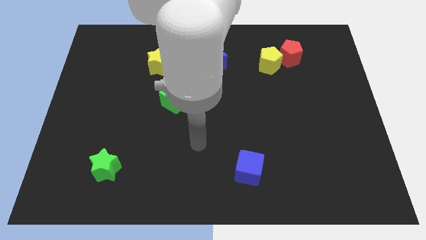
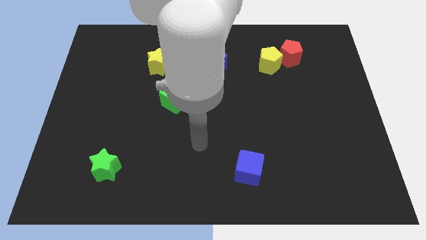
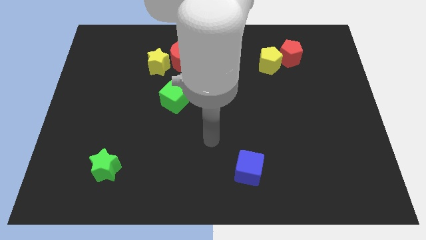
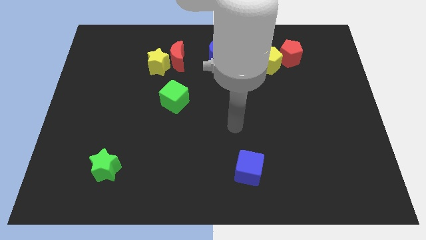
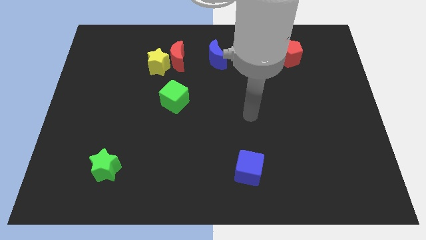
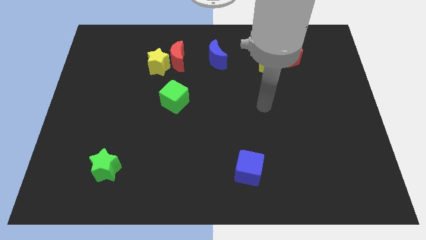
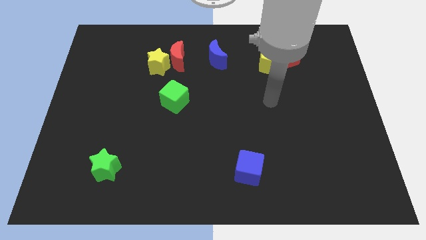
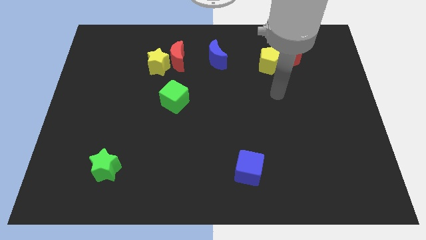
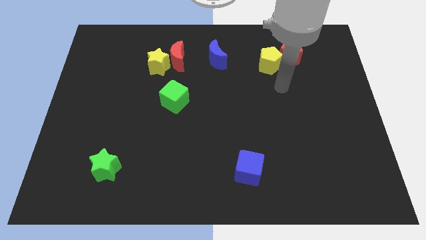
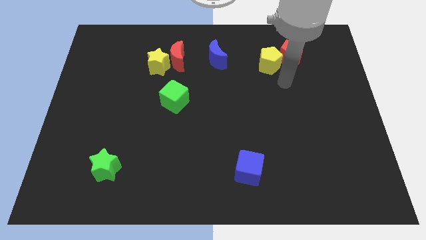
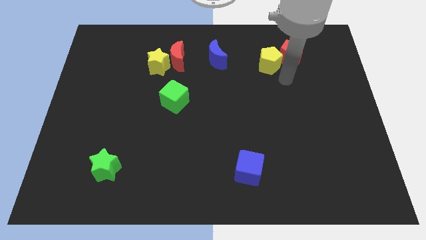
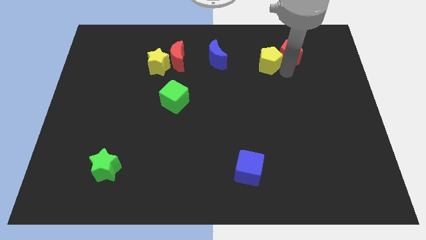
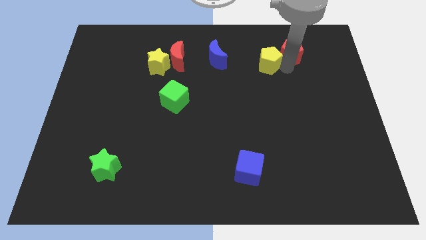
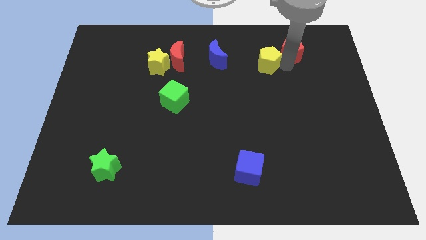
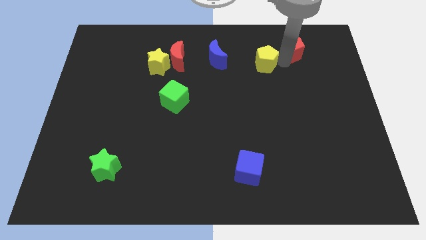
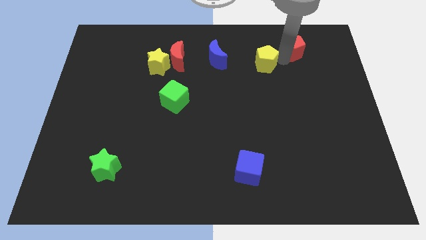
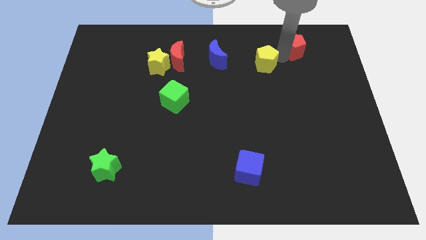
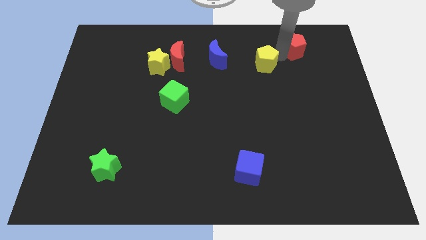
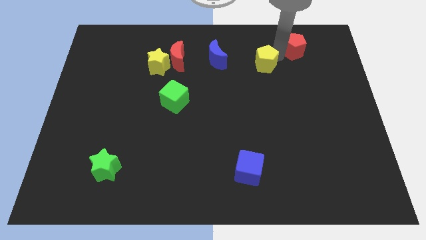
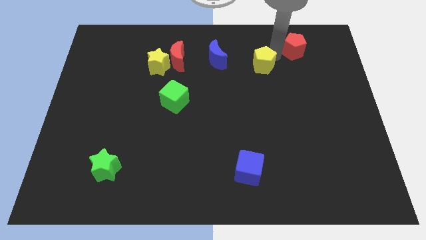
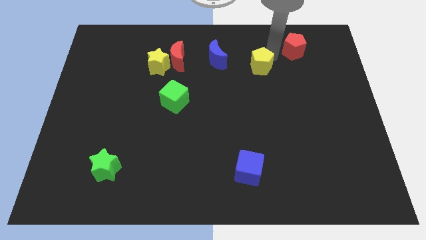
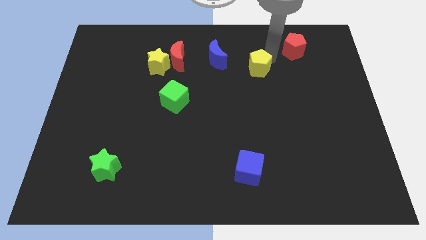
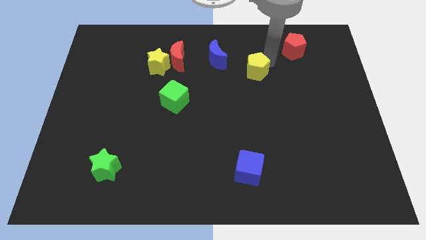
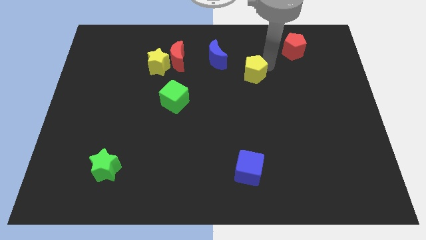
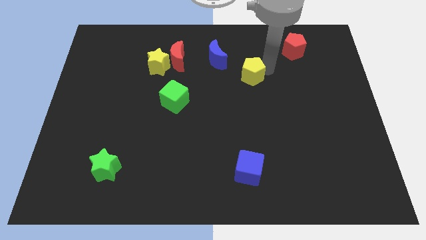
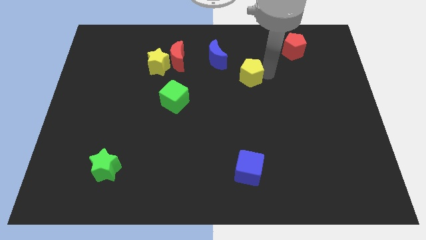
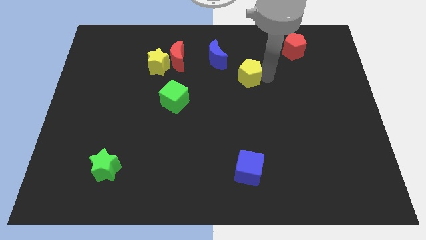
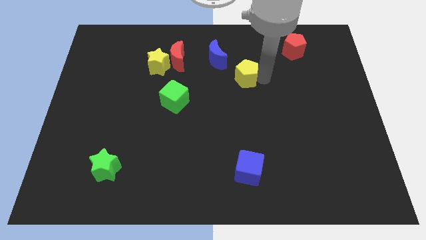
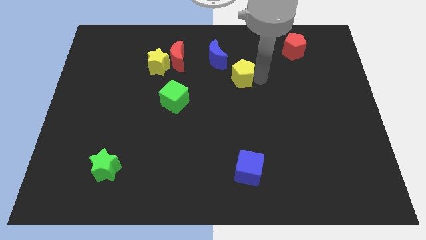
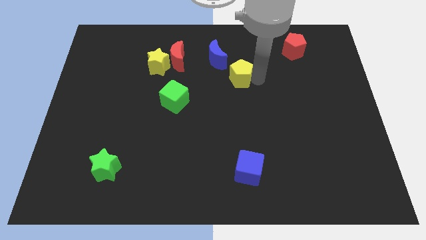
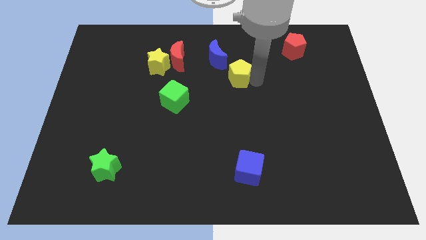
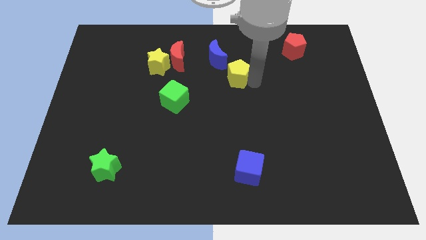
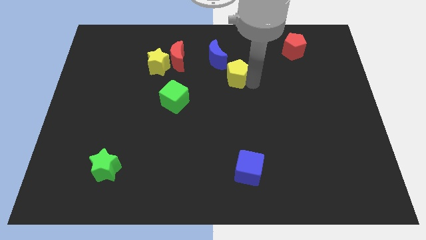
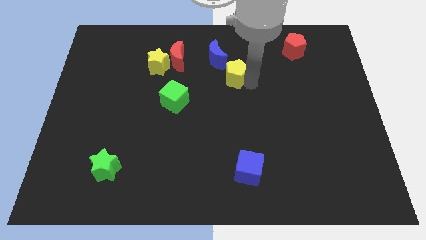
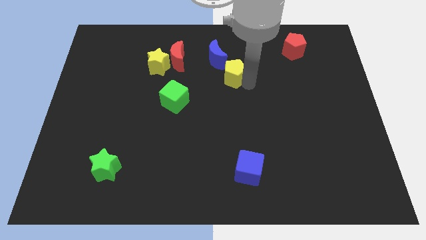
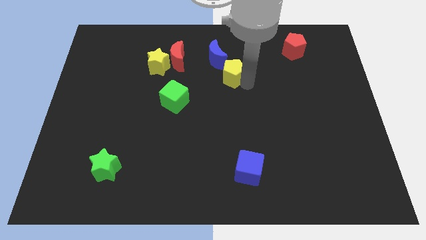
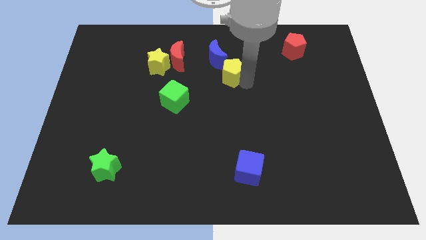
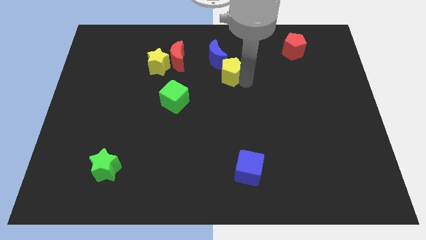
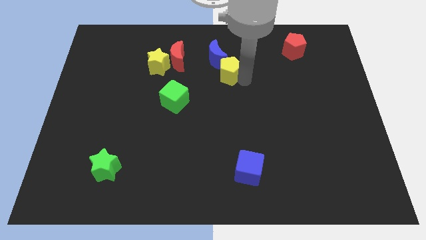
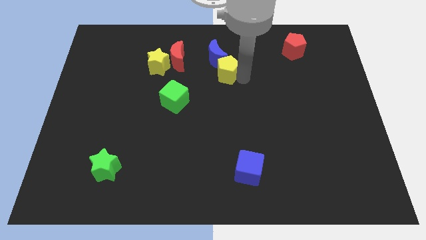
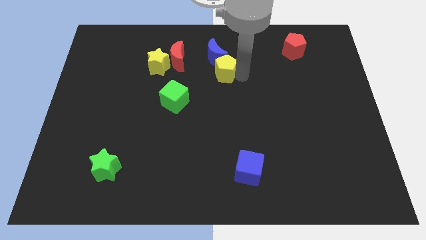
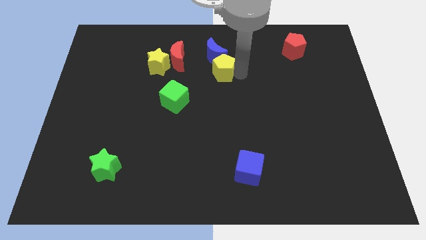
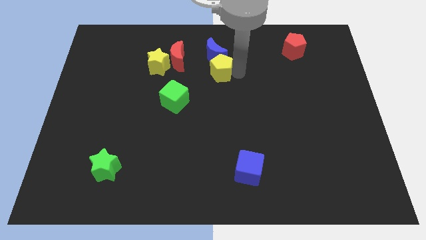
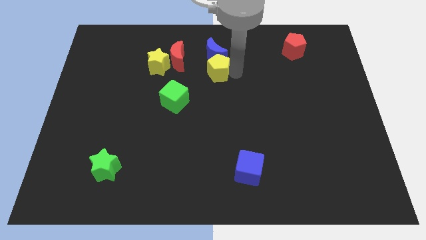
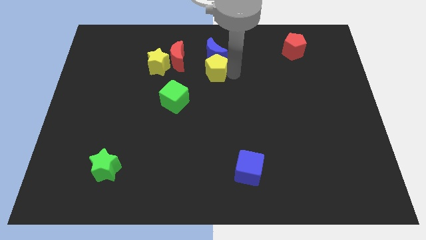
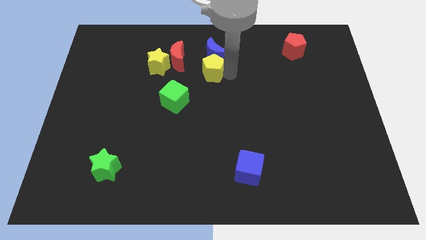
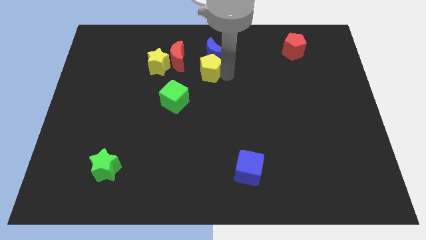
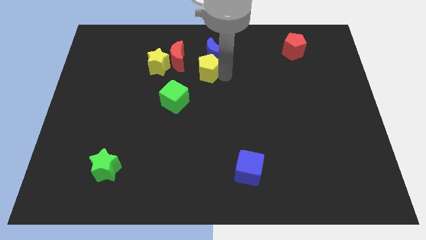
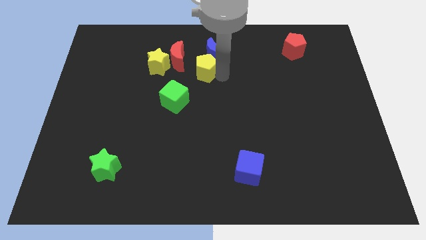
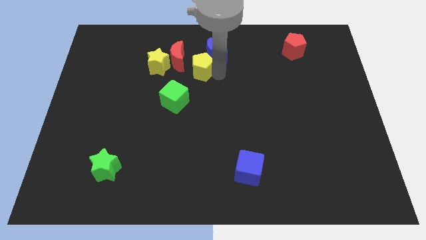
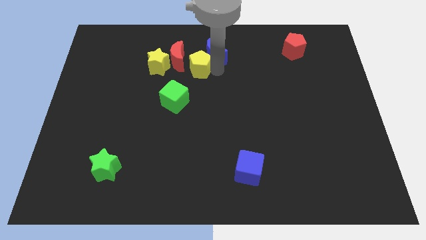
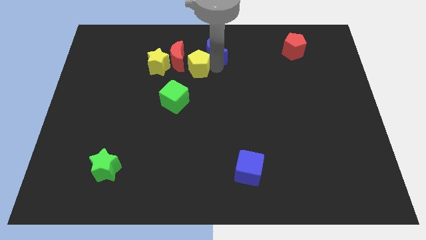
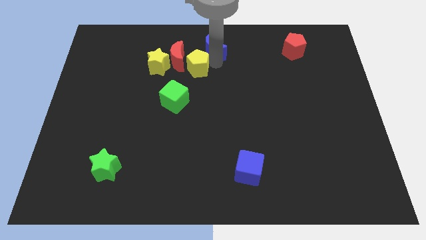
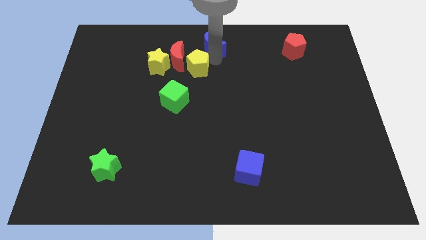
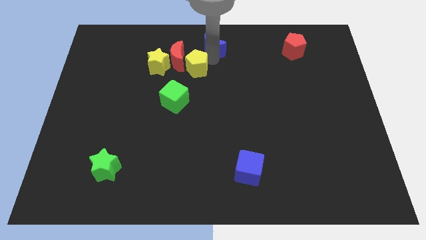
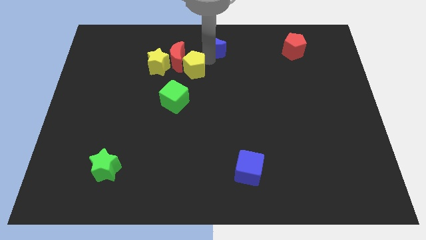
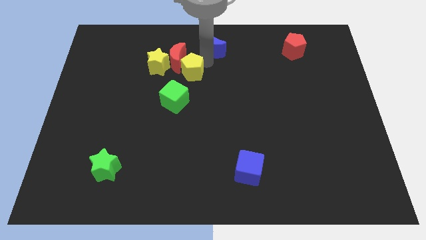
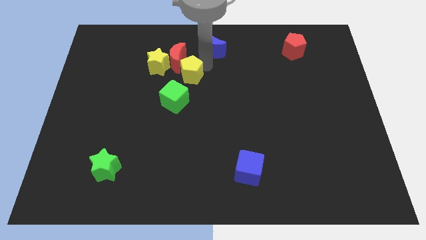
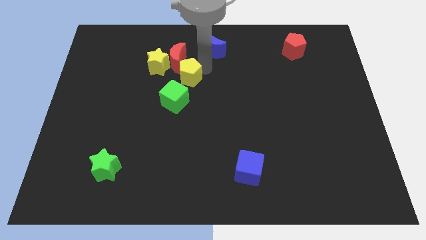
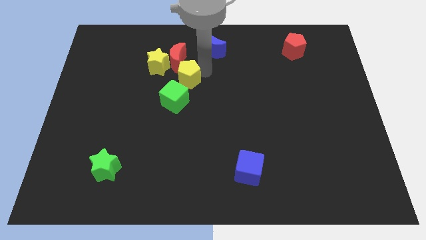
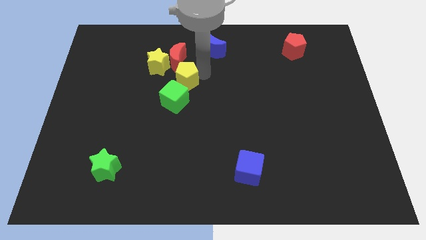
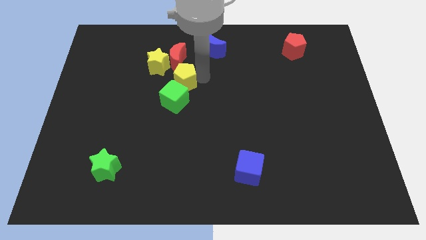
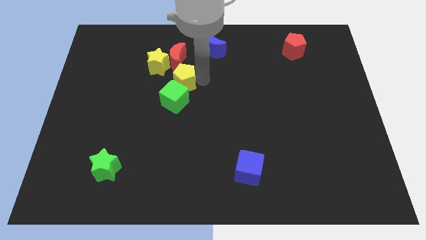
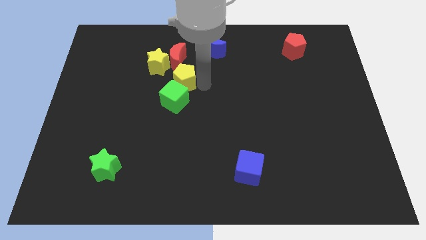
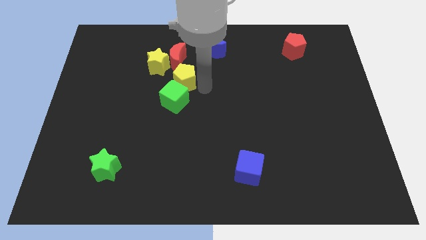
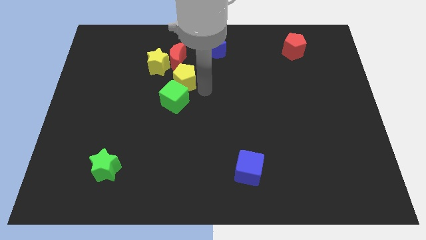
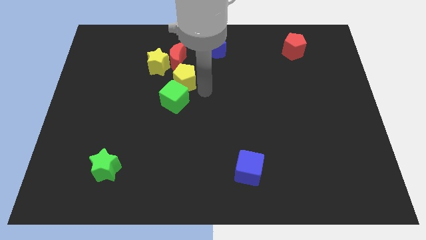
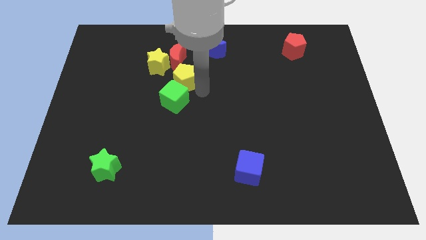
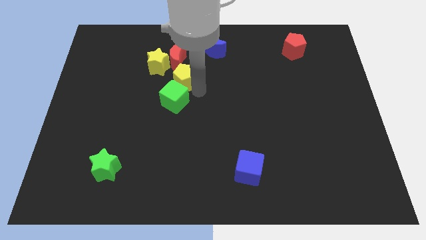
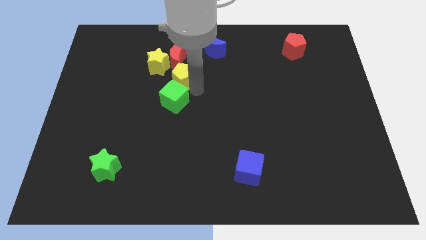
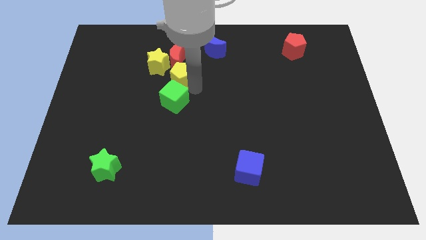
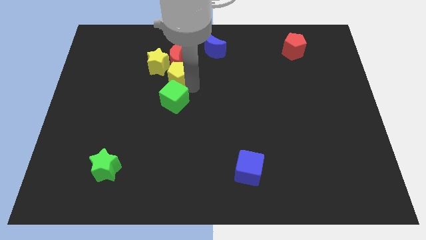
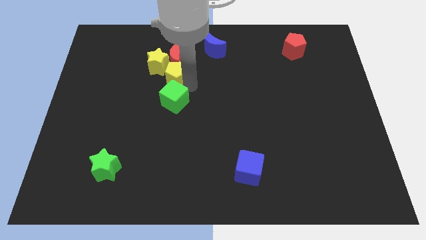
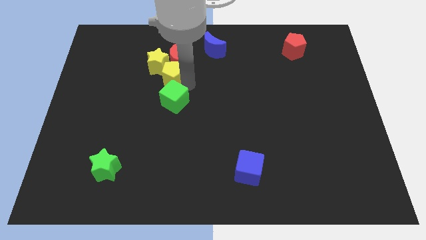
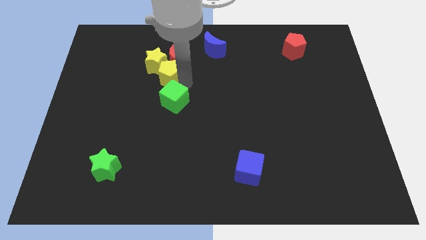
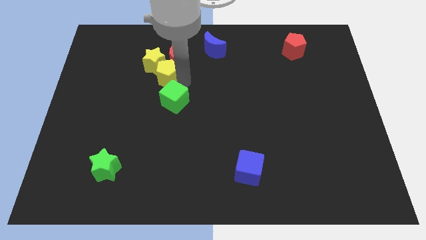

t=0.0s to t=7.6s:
push the yellow pentagon towards the yellow star

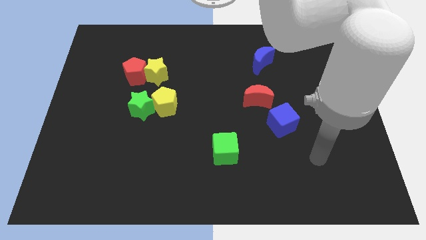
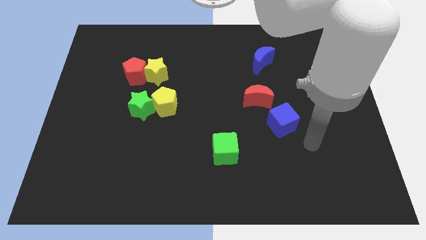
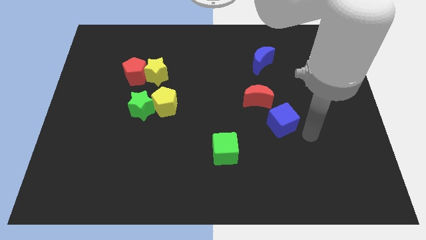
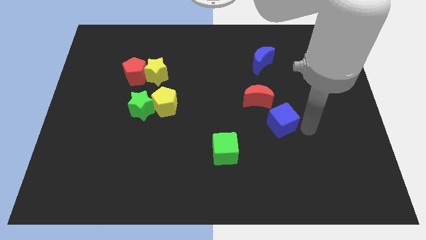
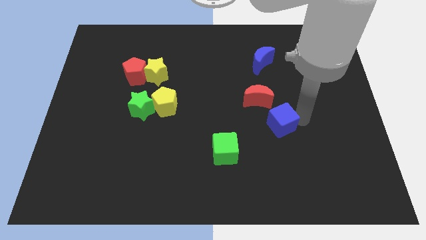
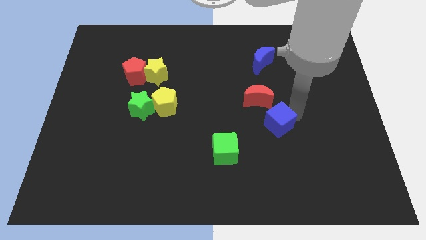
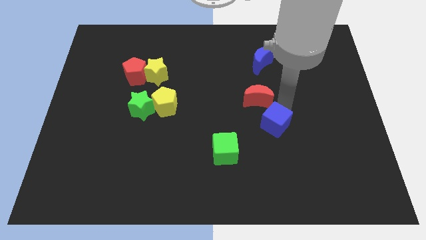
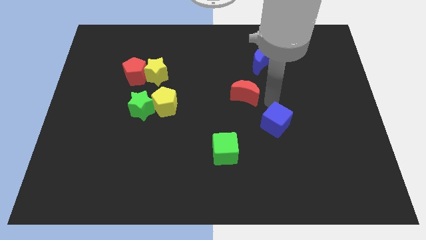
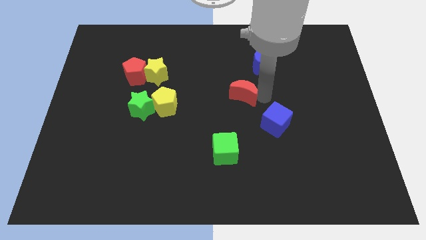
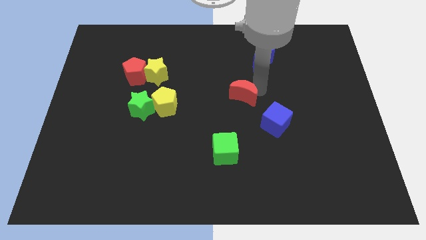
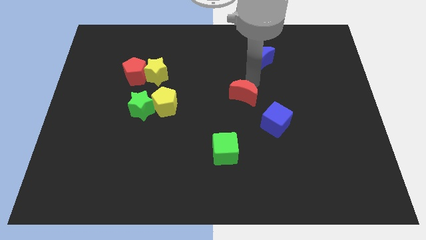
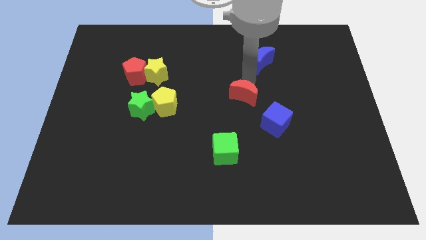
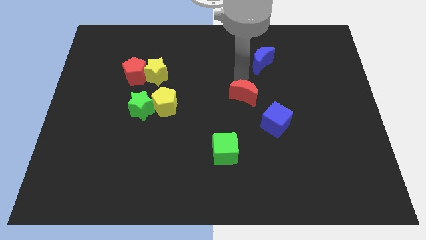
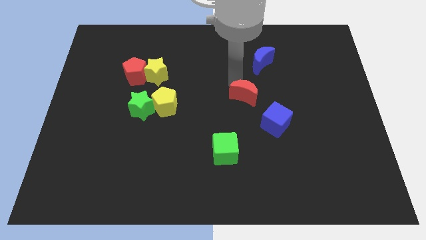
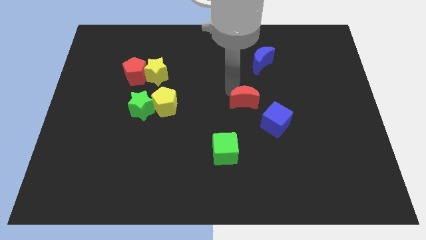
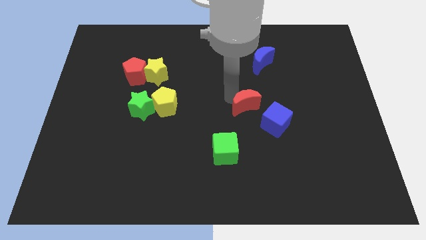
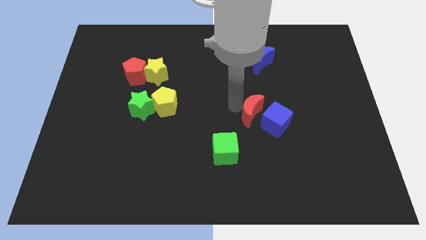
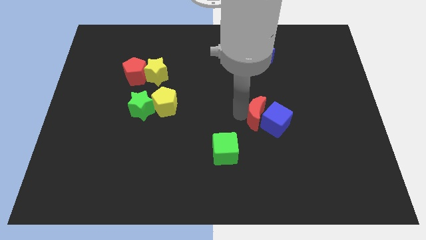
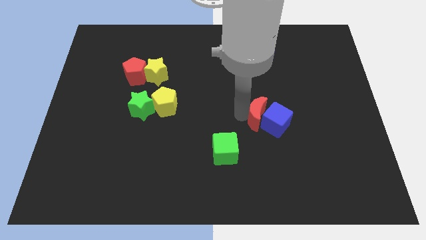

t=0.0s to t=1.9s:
move the red moon close to the blue cube
